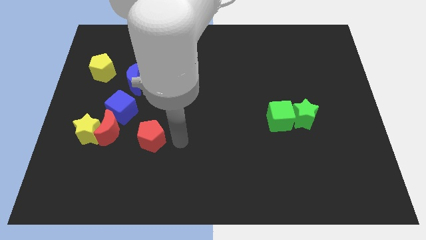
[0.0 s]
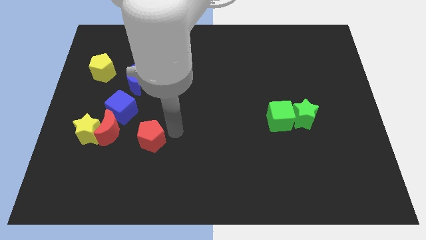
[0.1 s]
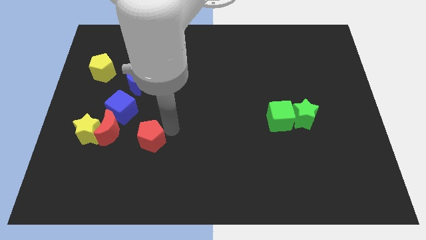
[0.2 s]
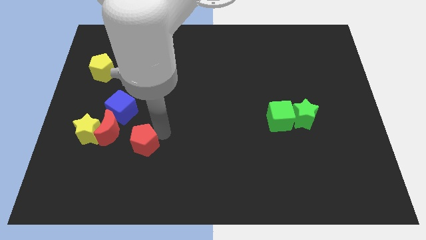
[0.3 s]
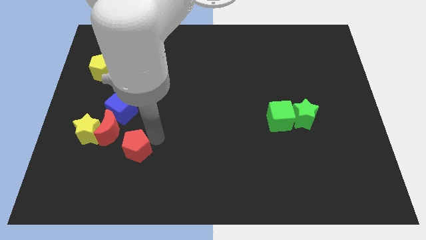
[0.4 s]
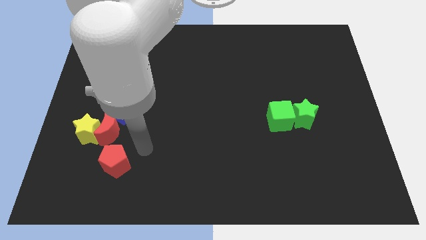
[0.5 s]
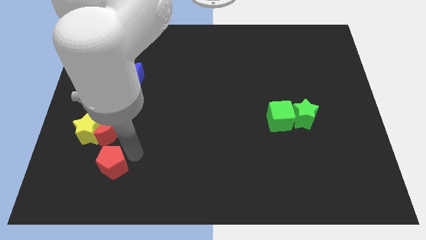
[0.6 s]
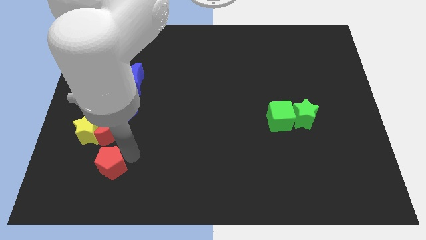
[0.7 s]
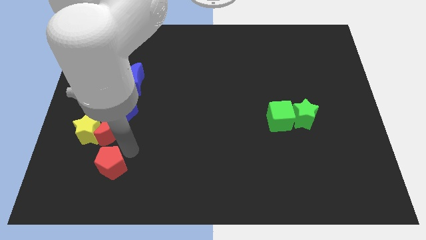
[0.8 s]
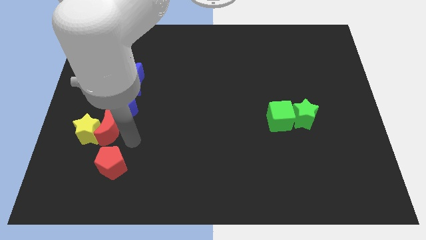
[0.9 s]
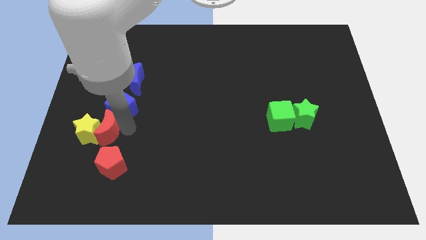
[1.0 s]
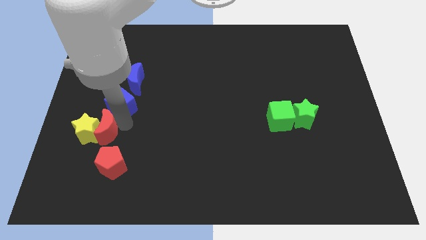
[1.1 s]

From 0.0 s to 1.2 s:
move the red pentagon to the bottom of the red crescent

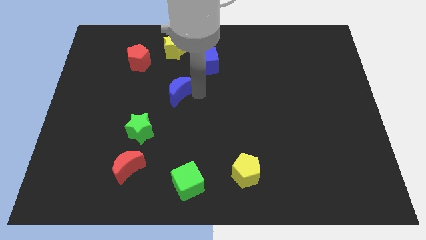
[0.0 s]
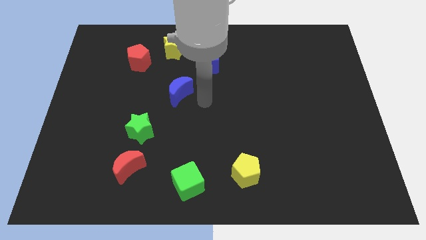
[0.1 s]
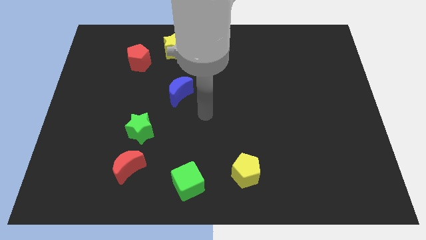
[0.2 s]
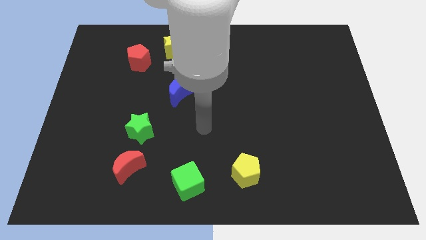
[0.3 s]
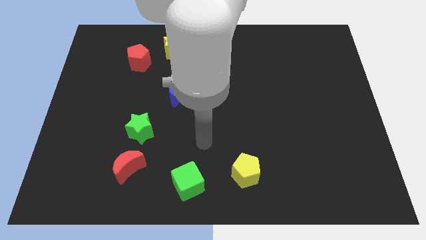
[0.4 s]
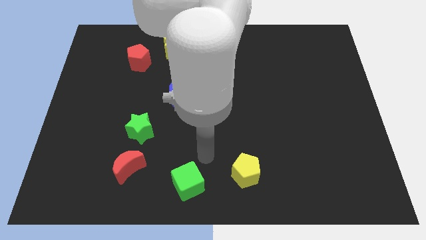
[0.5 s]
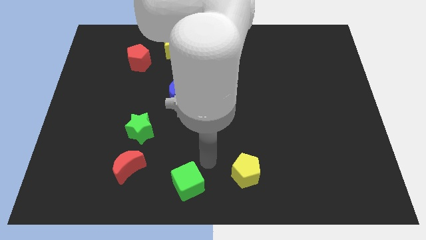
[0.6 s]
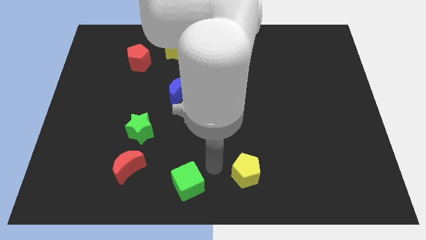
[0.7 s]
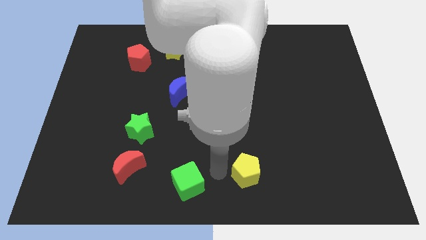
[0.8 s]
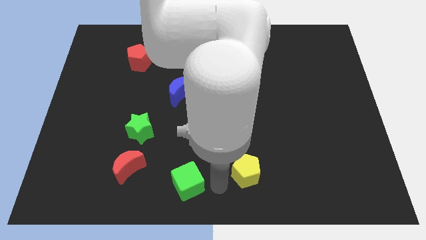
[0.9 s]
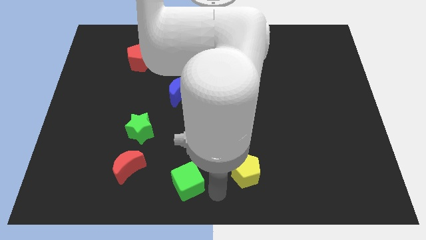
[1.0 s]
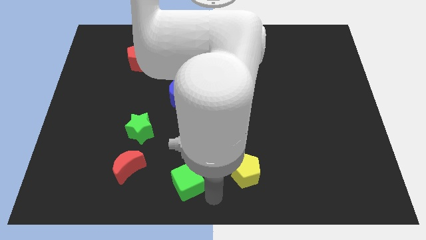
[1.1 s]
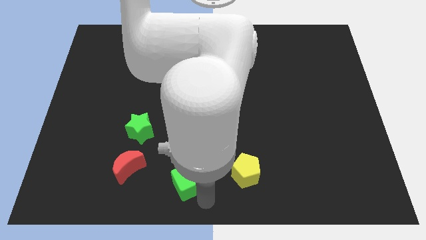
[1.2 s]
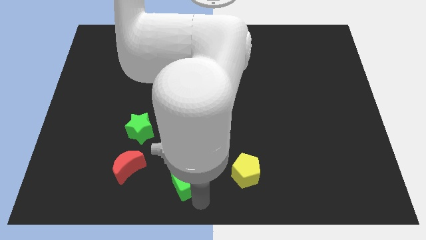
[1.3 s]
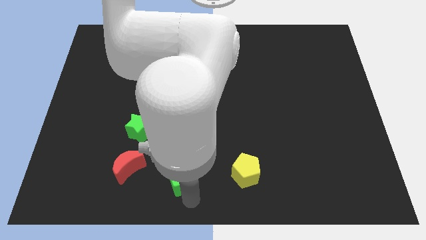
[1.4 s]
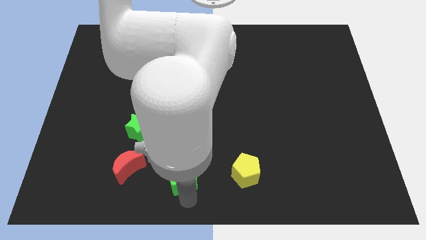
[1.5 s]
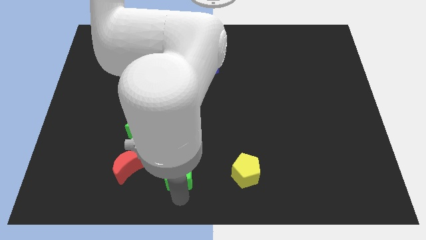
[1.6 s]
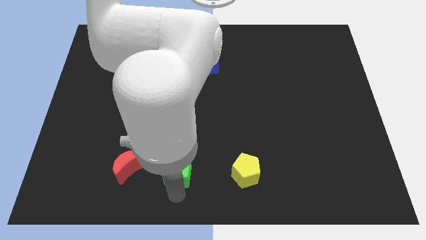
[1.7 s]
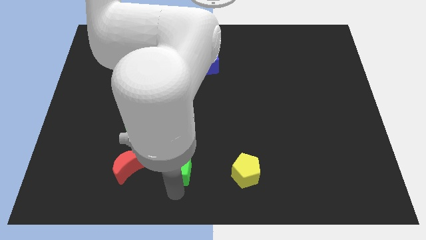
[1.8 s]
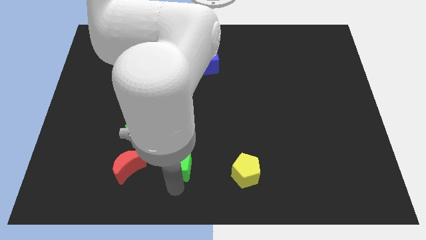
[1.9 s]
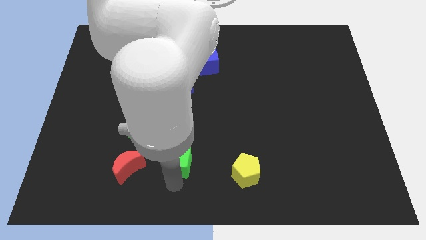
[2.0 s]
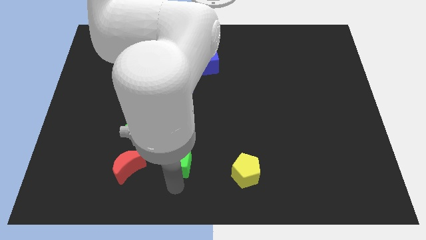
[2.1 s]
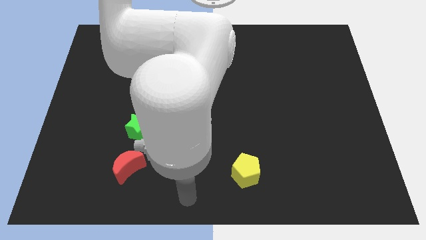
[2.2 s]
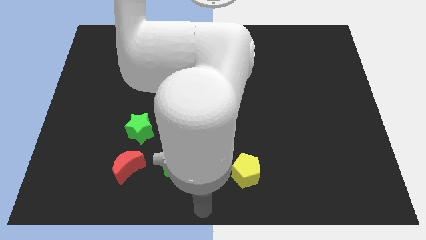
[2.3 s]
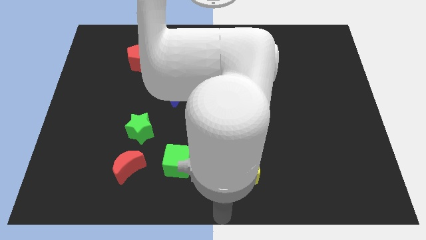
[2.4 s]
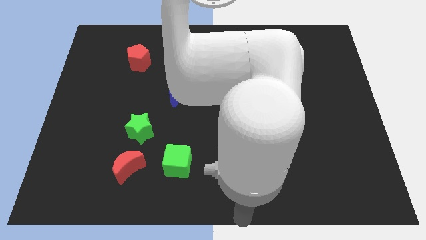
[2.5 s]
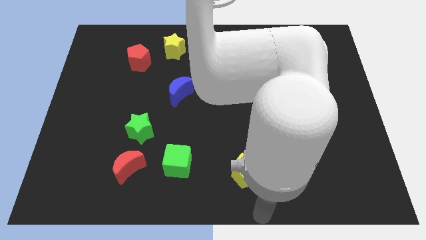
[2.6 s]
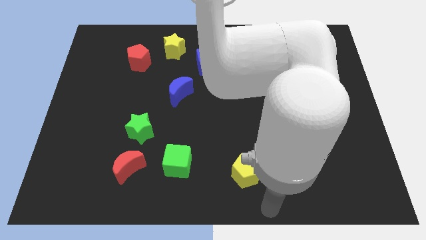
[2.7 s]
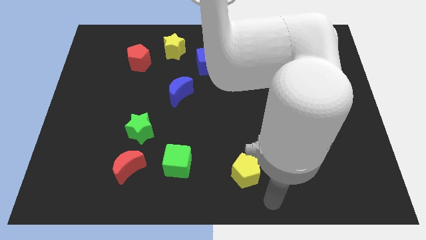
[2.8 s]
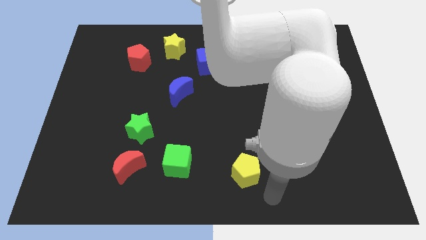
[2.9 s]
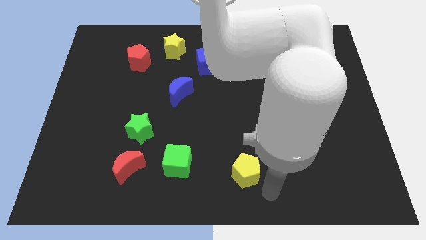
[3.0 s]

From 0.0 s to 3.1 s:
slide the green cube slightly upwards

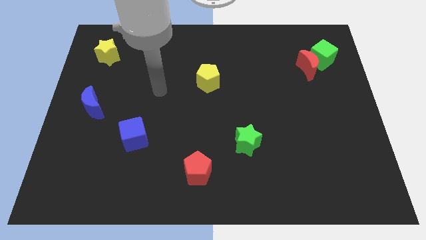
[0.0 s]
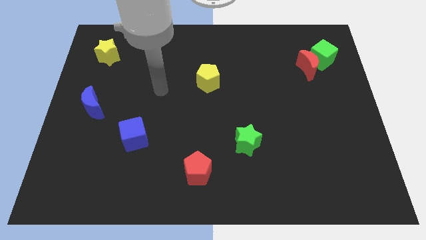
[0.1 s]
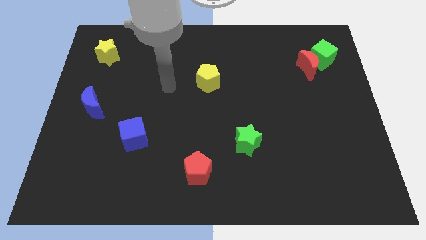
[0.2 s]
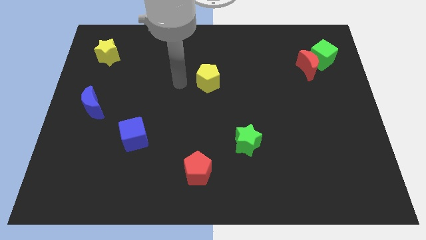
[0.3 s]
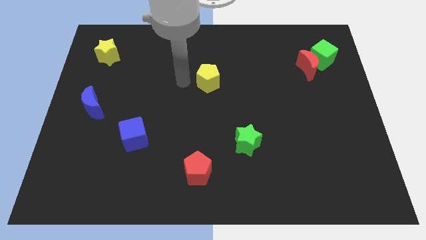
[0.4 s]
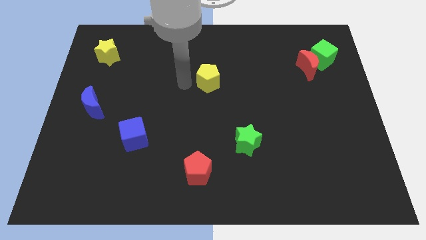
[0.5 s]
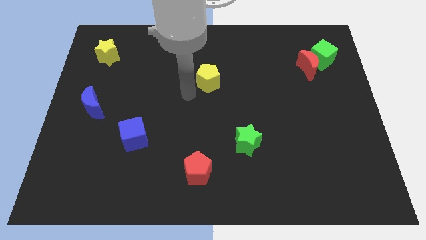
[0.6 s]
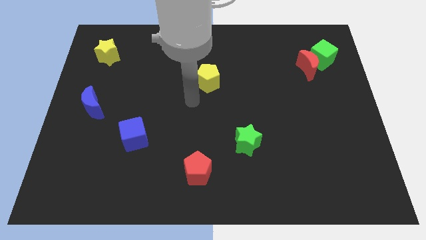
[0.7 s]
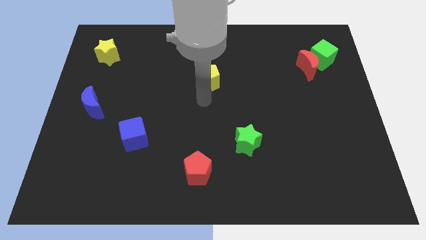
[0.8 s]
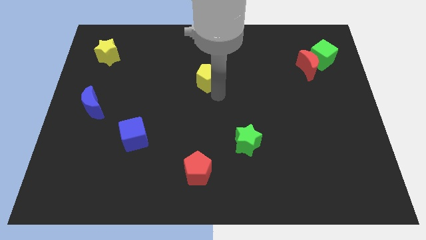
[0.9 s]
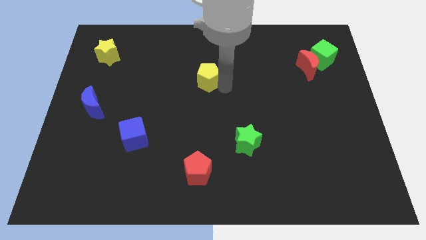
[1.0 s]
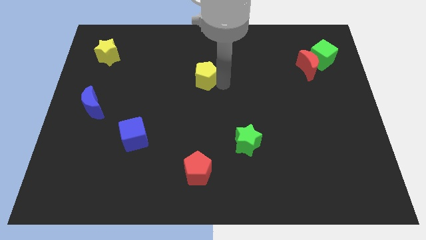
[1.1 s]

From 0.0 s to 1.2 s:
touch the right bottom side of the yellow pentagon

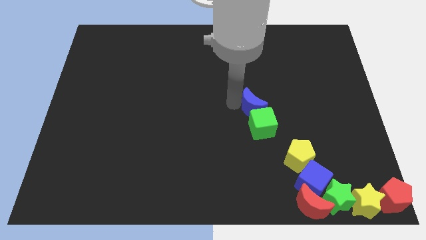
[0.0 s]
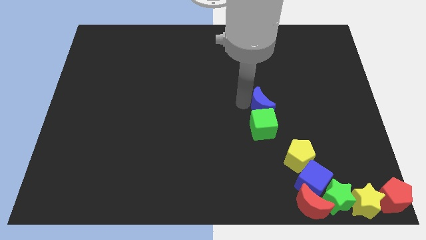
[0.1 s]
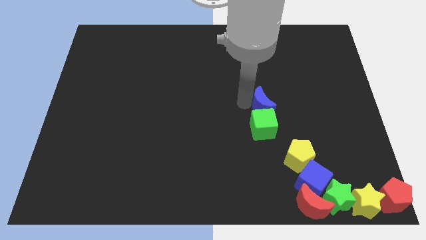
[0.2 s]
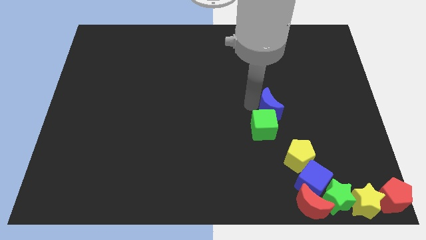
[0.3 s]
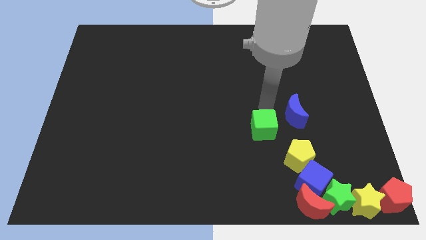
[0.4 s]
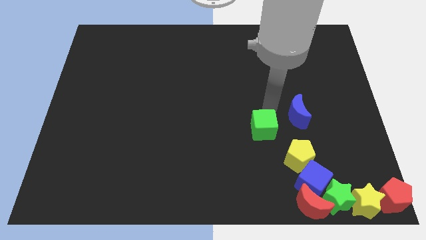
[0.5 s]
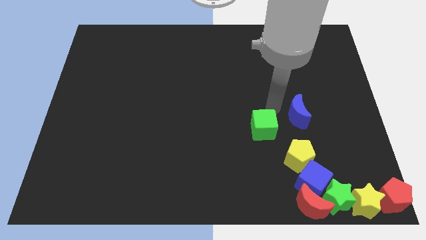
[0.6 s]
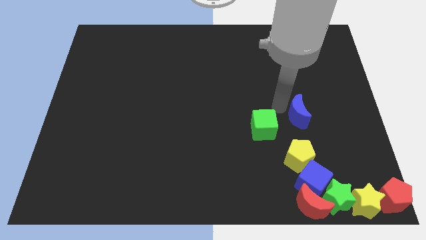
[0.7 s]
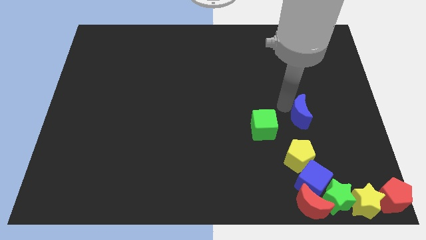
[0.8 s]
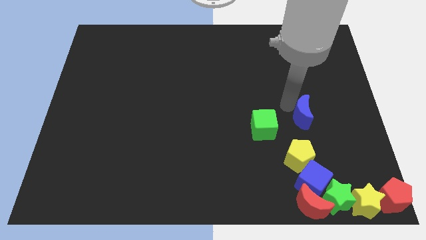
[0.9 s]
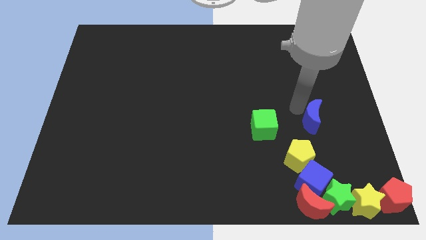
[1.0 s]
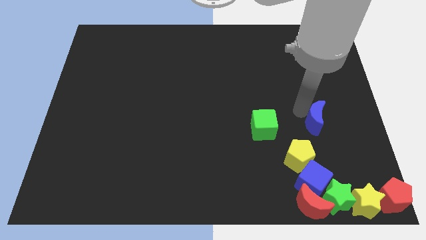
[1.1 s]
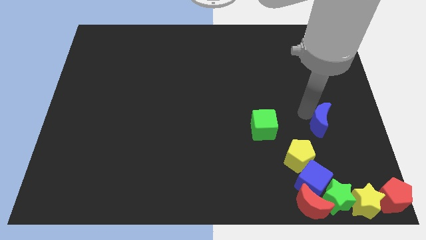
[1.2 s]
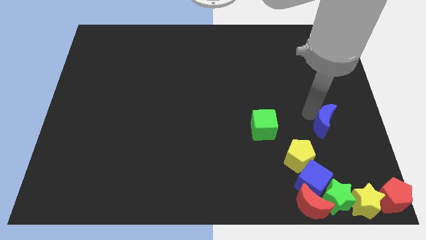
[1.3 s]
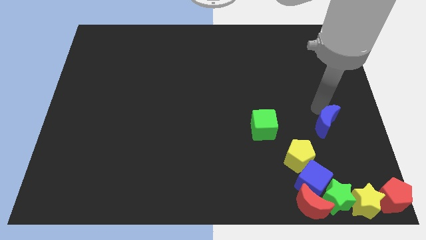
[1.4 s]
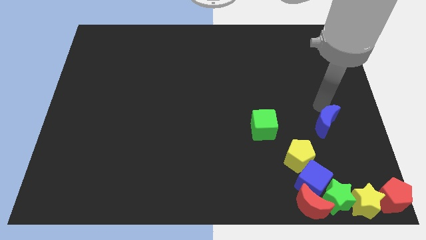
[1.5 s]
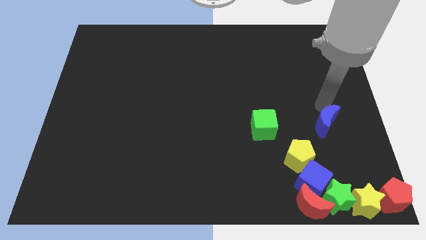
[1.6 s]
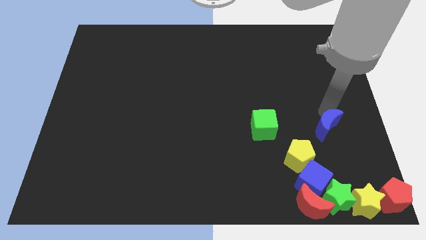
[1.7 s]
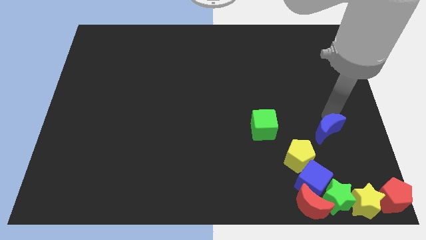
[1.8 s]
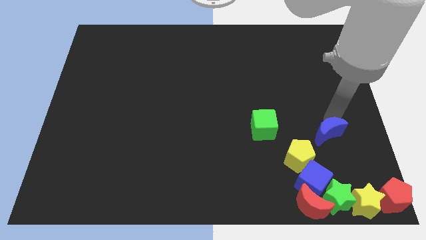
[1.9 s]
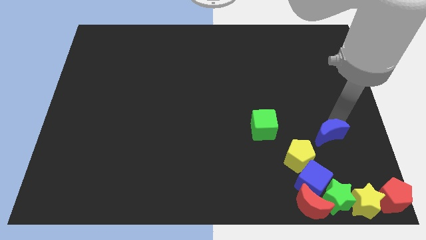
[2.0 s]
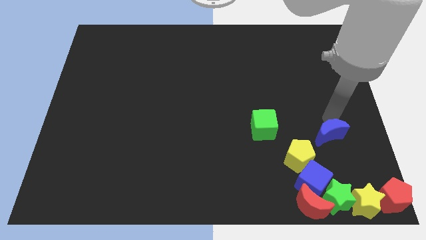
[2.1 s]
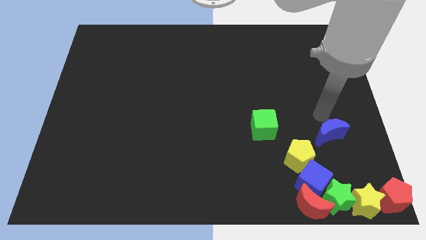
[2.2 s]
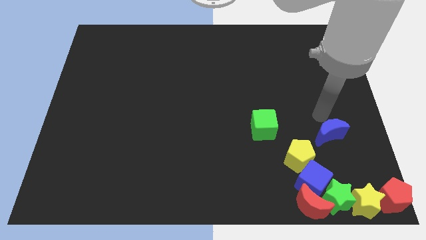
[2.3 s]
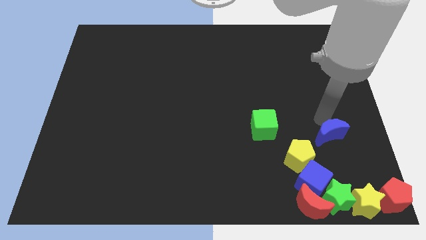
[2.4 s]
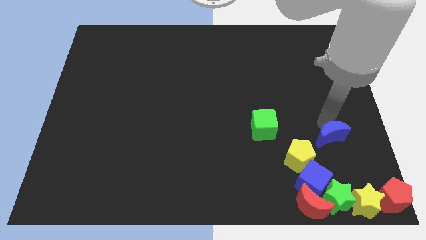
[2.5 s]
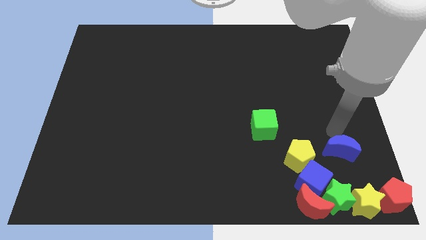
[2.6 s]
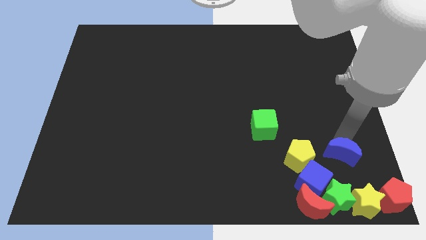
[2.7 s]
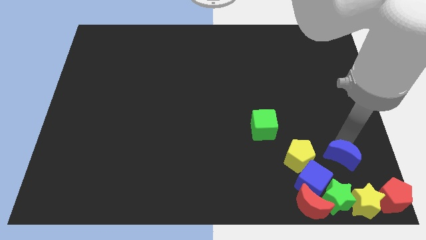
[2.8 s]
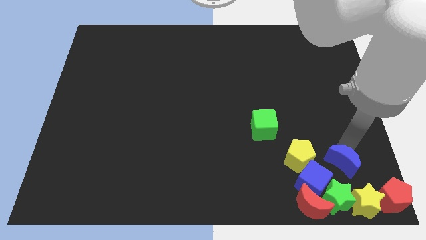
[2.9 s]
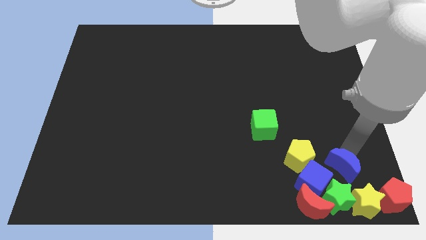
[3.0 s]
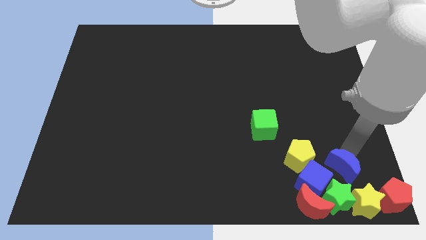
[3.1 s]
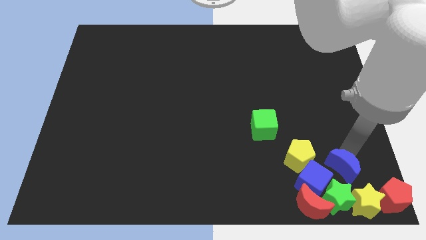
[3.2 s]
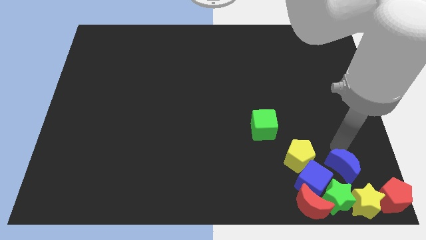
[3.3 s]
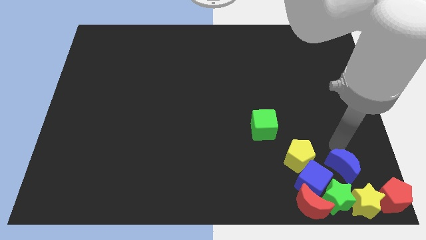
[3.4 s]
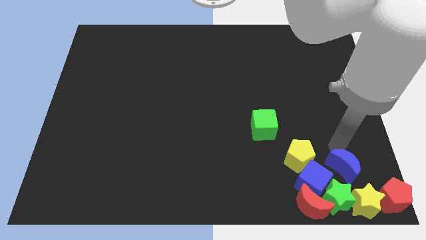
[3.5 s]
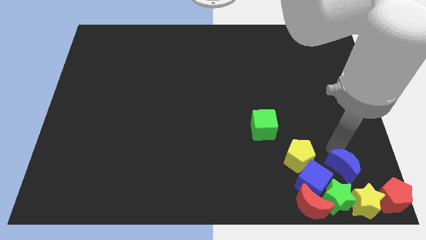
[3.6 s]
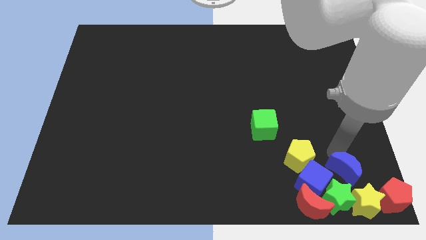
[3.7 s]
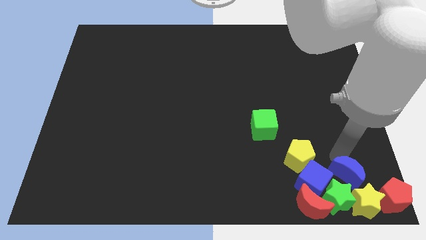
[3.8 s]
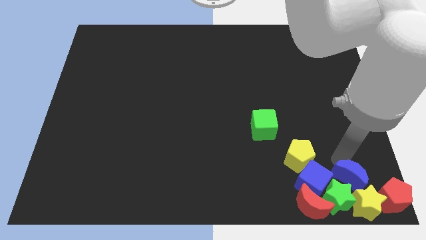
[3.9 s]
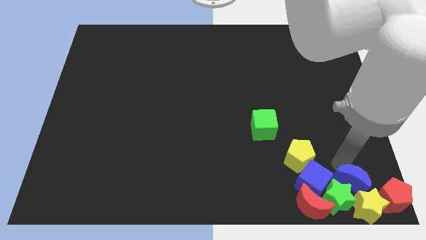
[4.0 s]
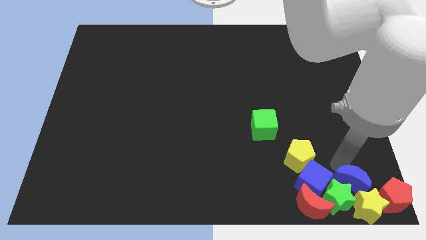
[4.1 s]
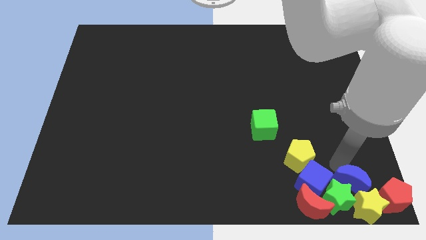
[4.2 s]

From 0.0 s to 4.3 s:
move the blue crescent to the bottom right of the board
